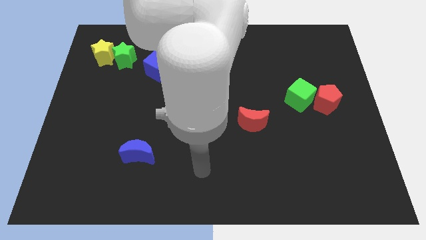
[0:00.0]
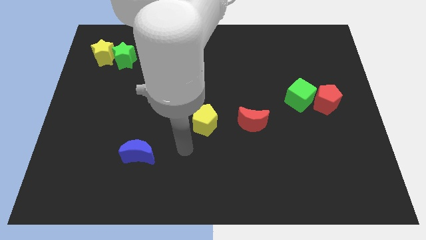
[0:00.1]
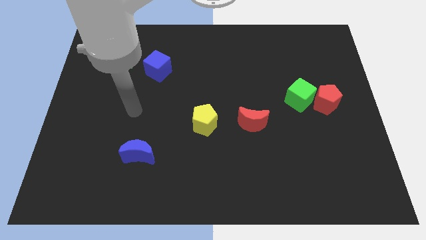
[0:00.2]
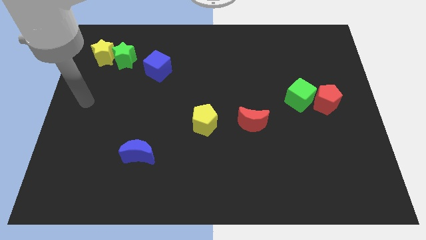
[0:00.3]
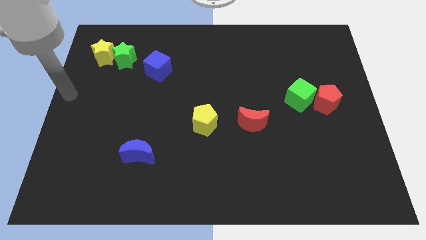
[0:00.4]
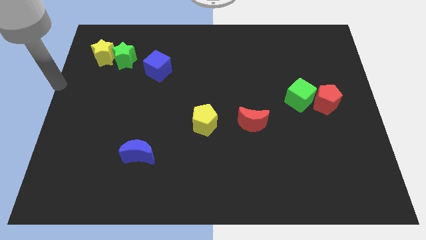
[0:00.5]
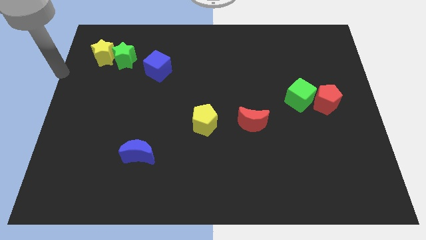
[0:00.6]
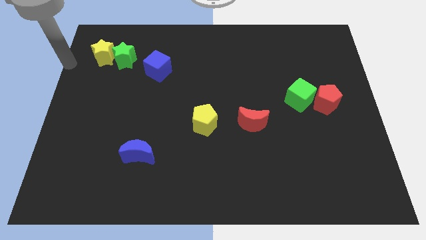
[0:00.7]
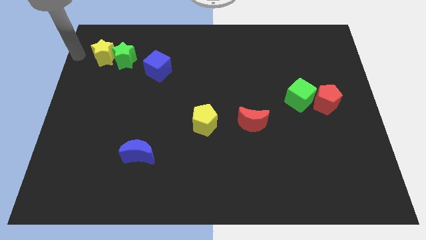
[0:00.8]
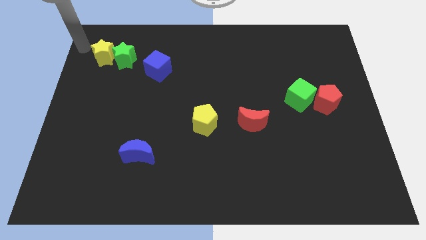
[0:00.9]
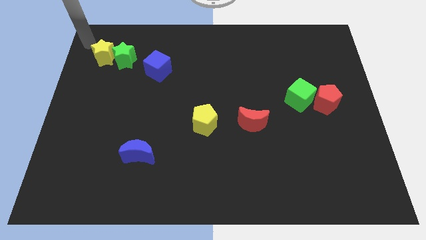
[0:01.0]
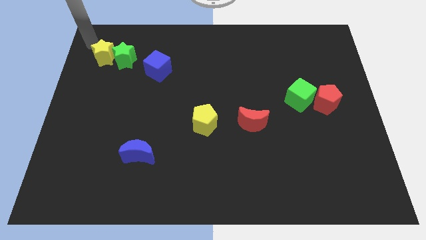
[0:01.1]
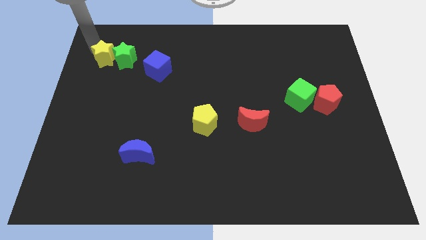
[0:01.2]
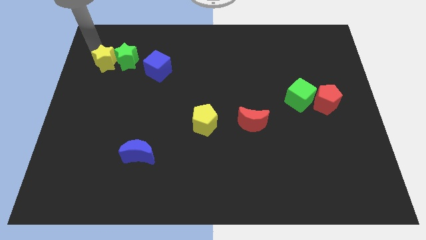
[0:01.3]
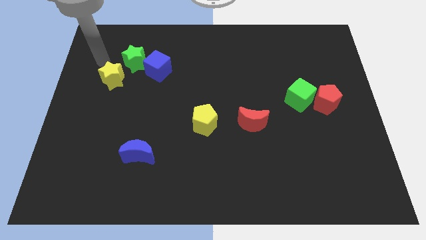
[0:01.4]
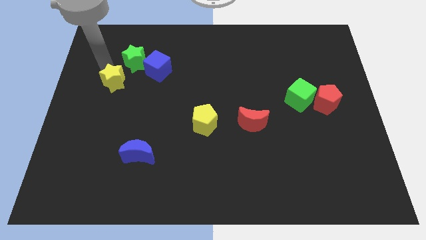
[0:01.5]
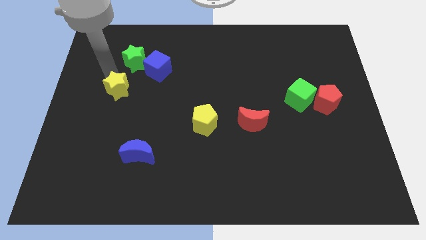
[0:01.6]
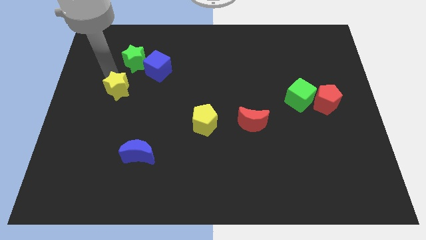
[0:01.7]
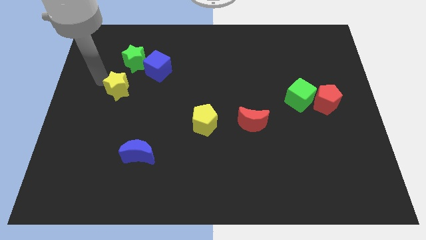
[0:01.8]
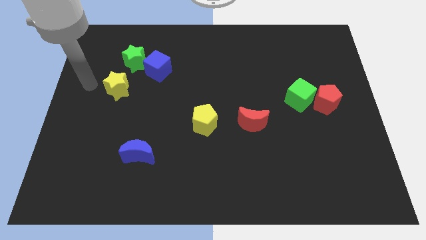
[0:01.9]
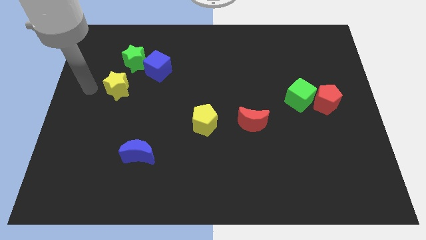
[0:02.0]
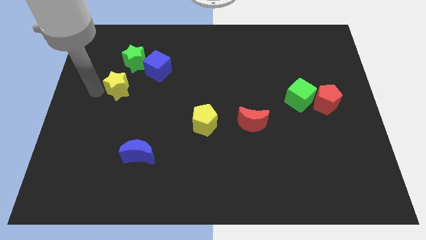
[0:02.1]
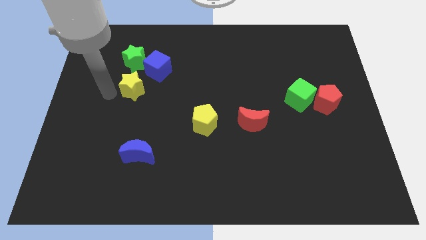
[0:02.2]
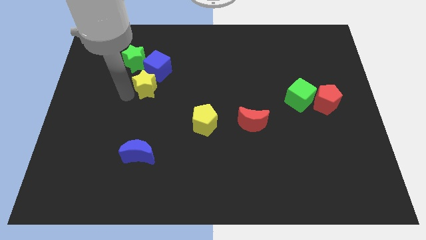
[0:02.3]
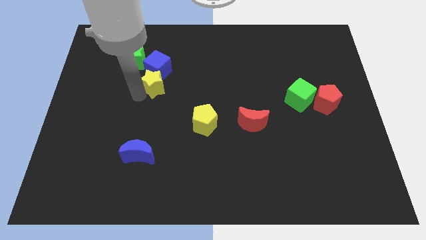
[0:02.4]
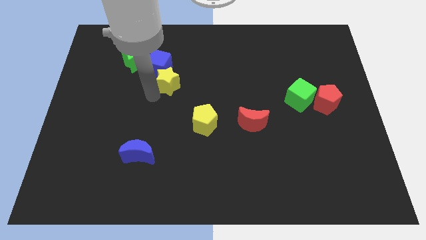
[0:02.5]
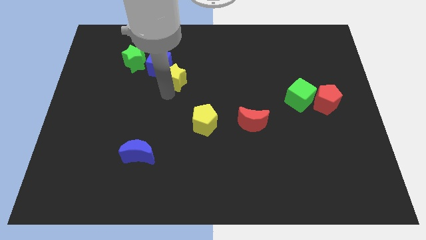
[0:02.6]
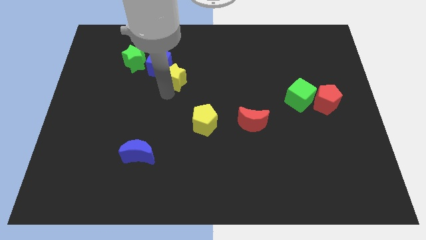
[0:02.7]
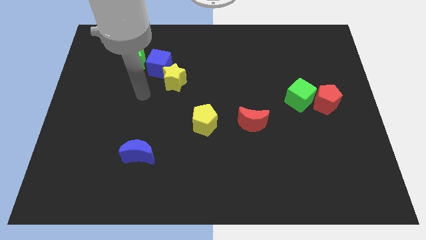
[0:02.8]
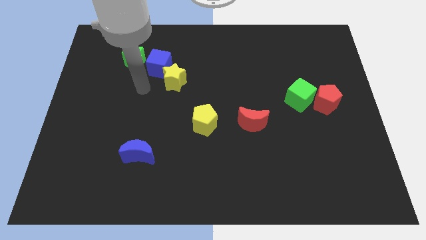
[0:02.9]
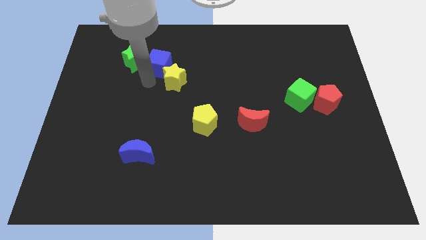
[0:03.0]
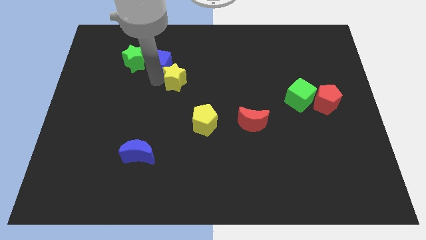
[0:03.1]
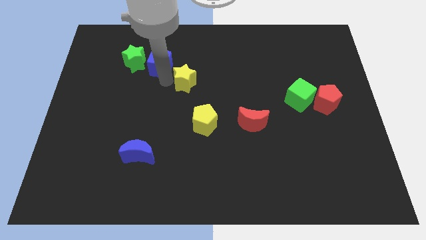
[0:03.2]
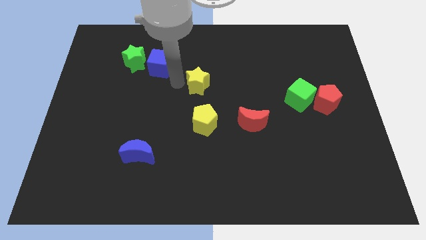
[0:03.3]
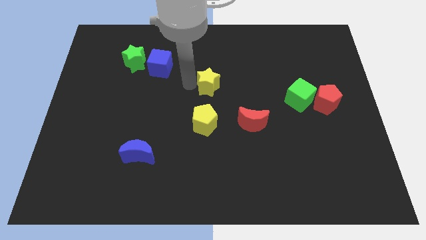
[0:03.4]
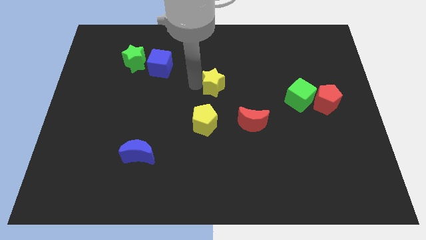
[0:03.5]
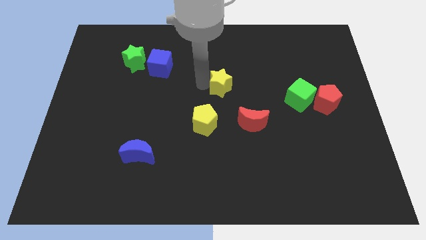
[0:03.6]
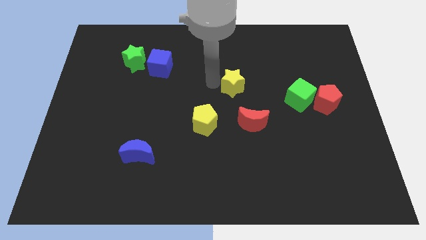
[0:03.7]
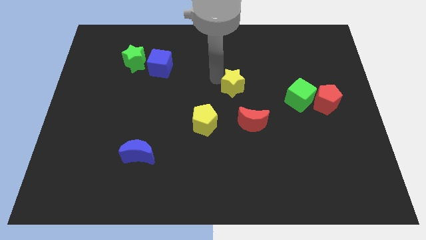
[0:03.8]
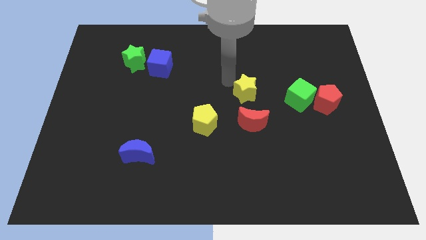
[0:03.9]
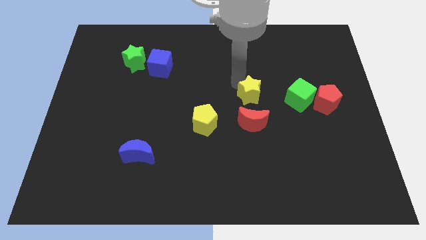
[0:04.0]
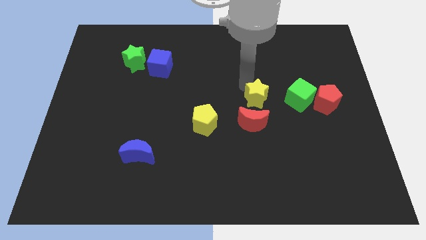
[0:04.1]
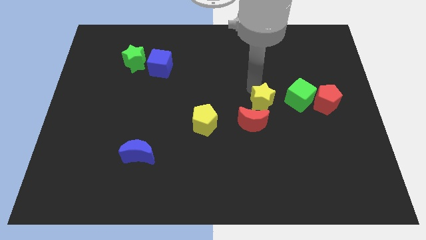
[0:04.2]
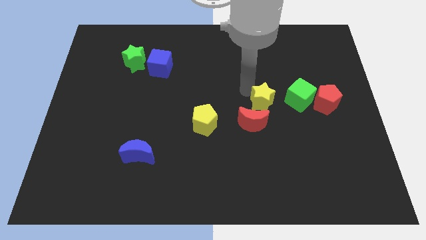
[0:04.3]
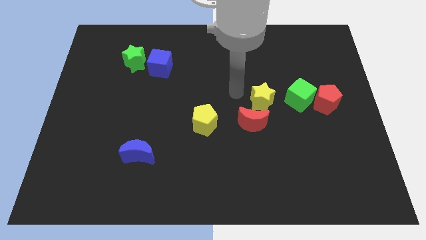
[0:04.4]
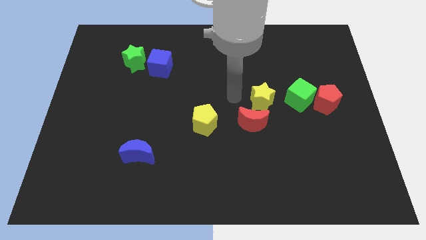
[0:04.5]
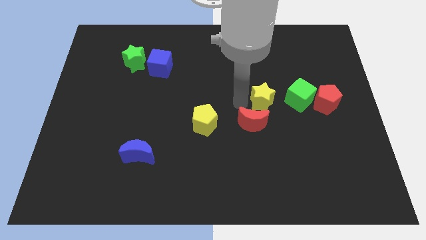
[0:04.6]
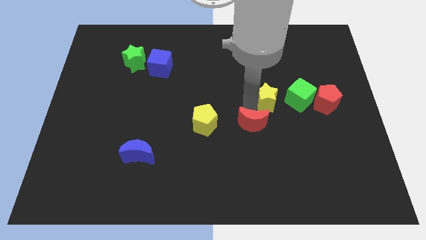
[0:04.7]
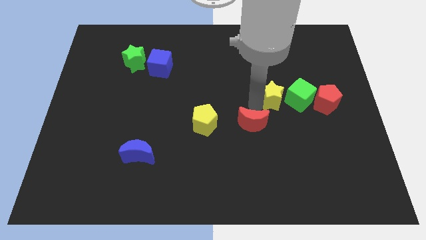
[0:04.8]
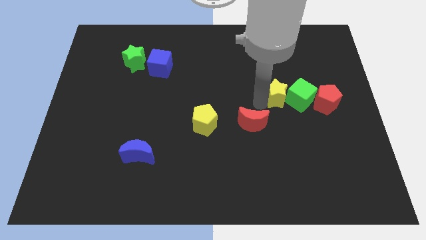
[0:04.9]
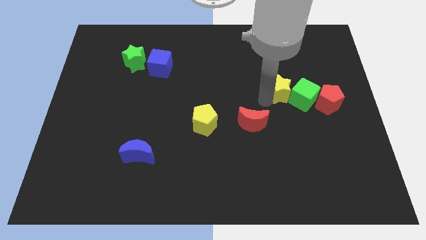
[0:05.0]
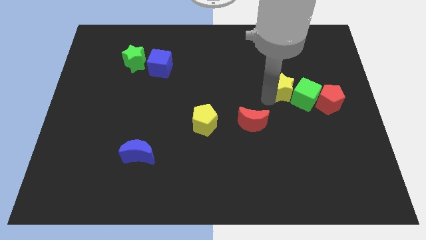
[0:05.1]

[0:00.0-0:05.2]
put the yellow star close to the green cube

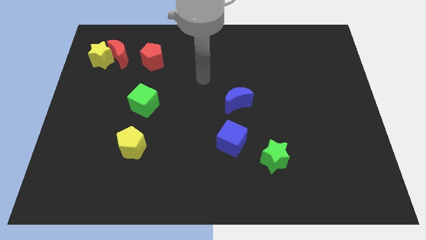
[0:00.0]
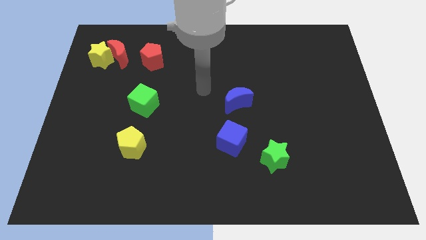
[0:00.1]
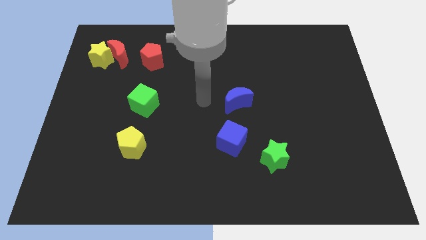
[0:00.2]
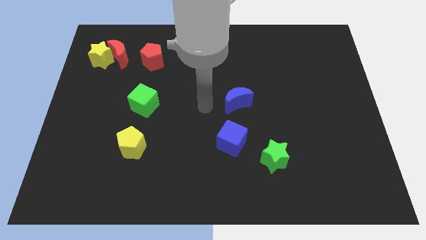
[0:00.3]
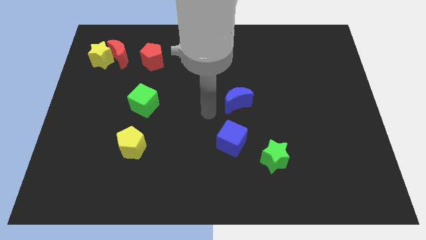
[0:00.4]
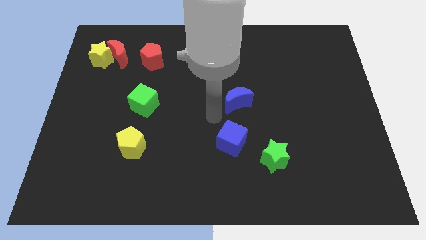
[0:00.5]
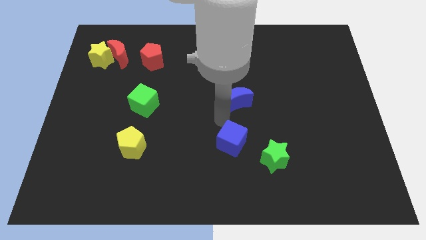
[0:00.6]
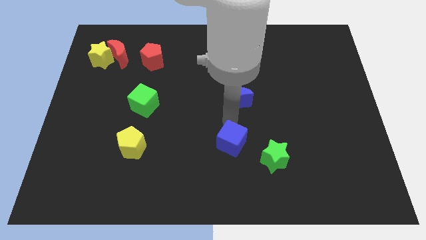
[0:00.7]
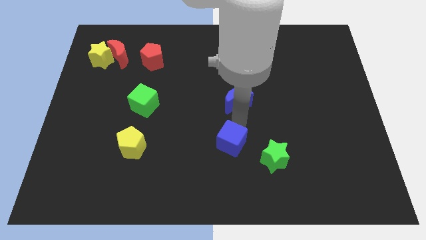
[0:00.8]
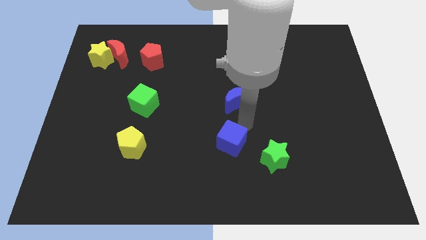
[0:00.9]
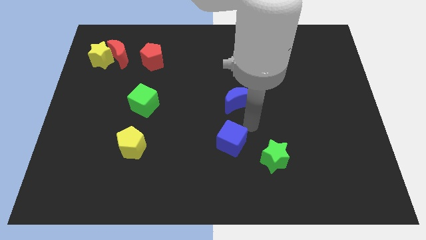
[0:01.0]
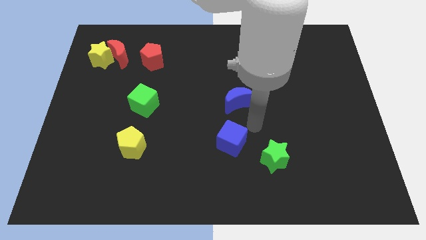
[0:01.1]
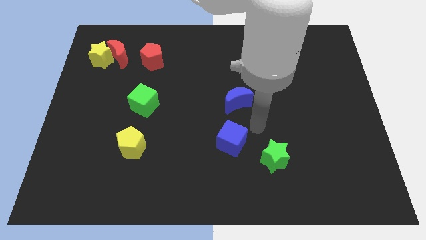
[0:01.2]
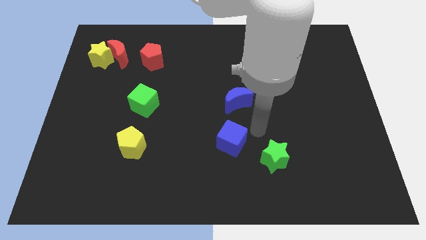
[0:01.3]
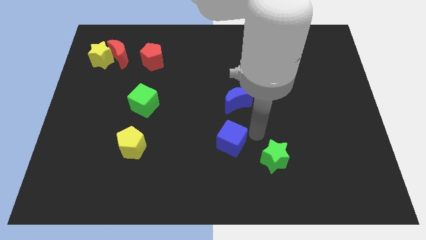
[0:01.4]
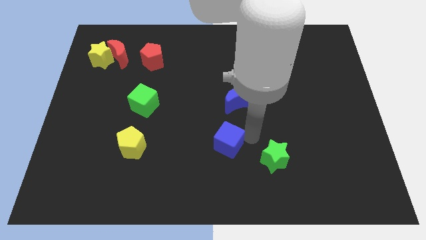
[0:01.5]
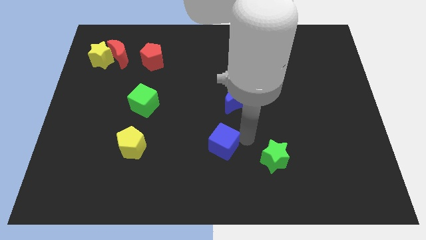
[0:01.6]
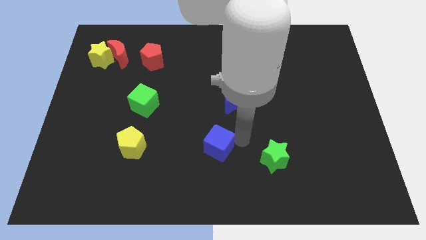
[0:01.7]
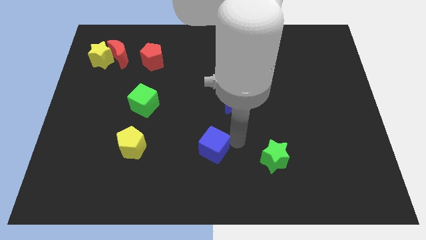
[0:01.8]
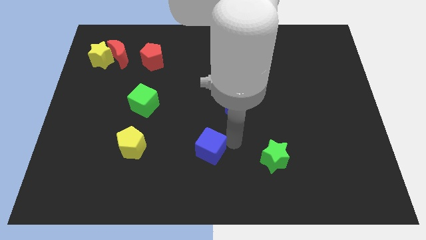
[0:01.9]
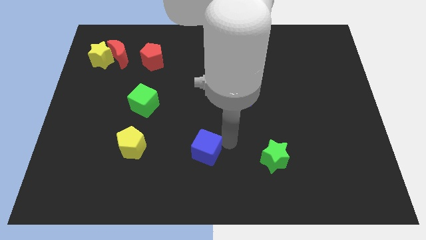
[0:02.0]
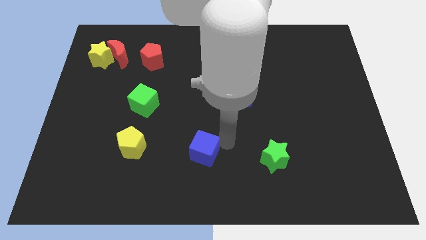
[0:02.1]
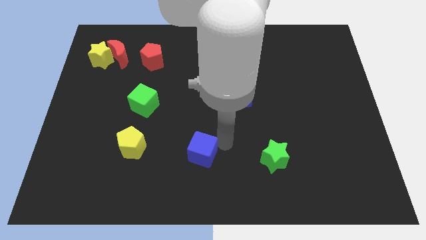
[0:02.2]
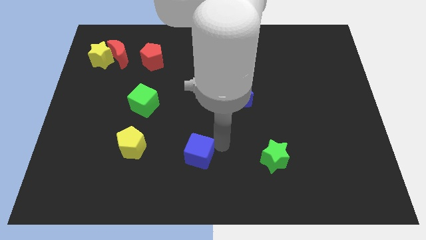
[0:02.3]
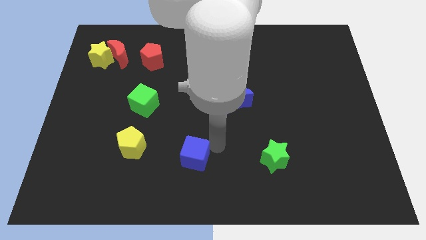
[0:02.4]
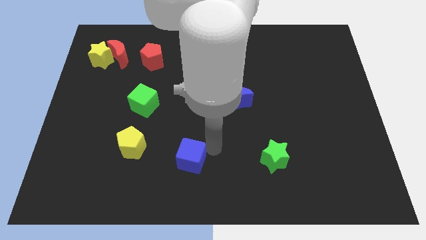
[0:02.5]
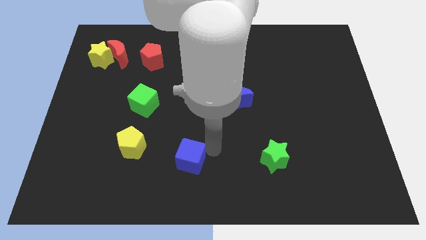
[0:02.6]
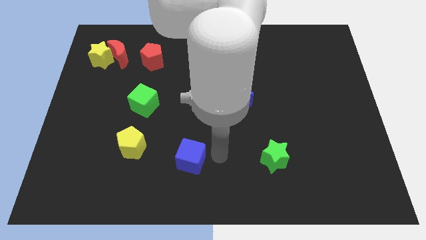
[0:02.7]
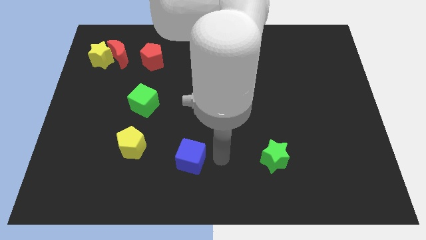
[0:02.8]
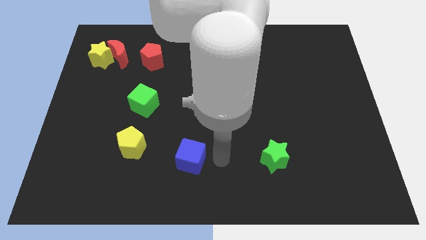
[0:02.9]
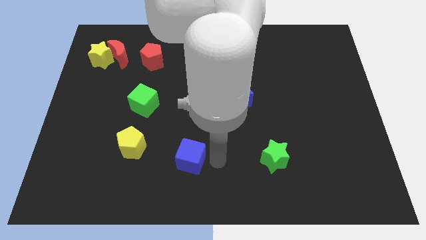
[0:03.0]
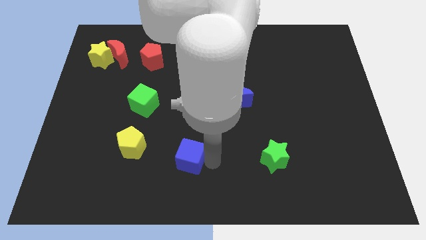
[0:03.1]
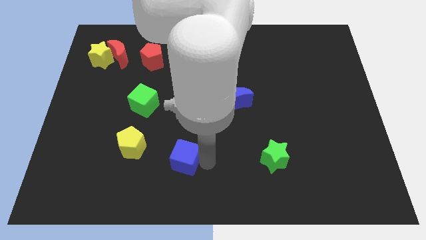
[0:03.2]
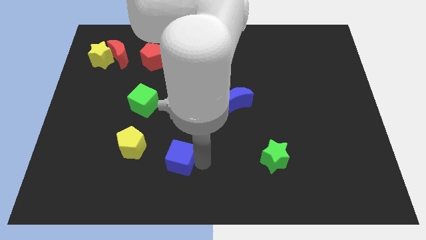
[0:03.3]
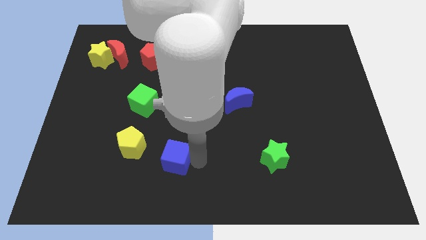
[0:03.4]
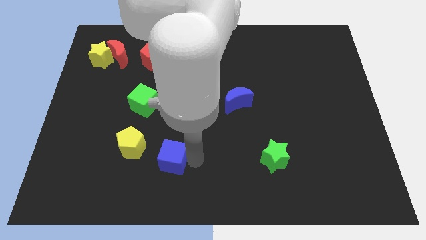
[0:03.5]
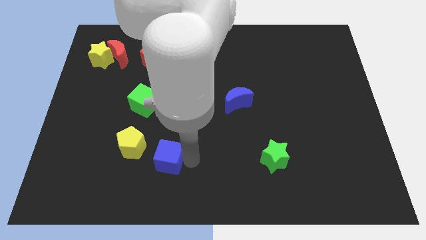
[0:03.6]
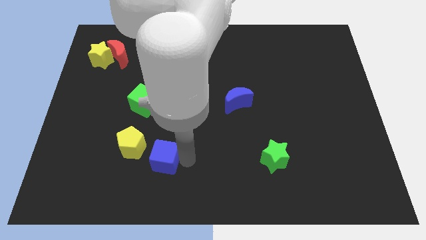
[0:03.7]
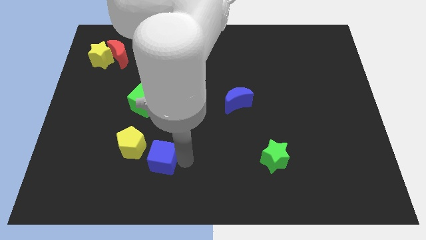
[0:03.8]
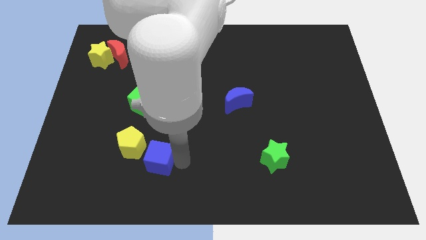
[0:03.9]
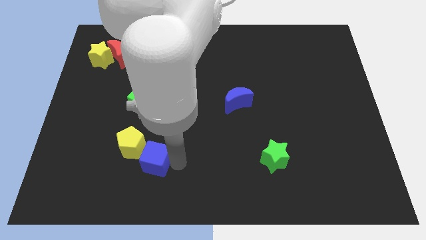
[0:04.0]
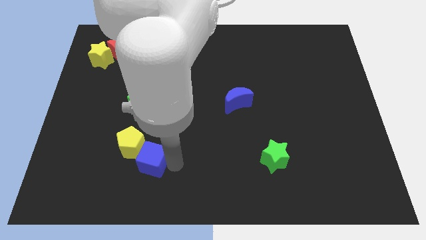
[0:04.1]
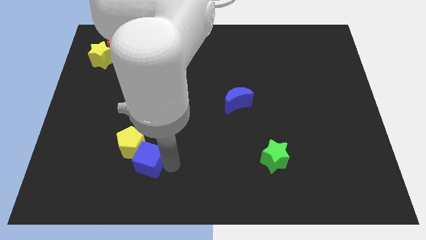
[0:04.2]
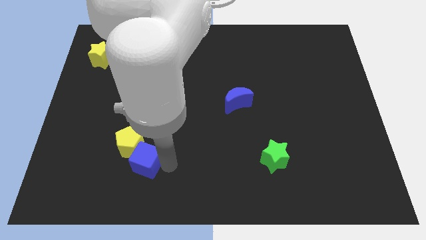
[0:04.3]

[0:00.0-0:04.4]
move the blue cube to the yellow pentagon
